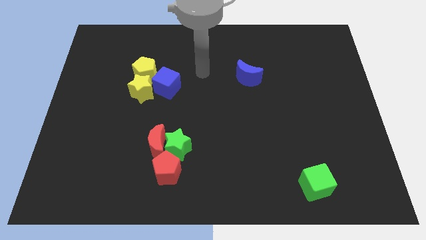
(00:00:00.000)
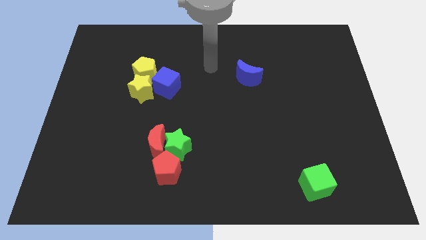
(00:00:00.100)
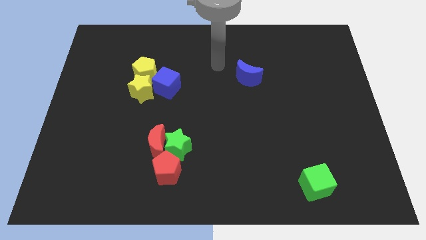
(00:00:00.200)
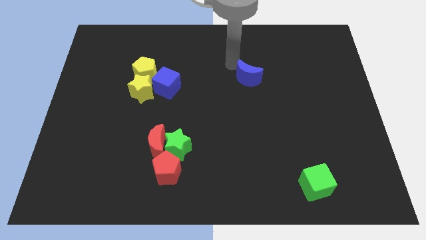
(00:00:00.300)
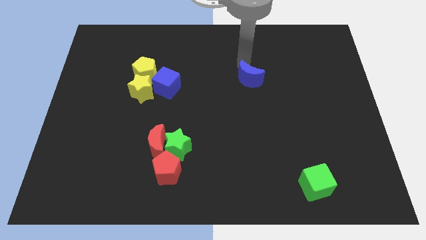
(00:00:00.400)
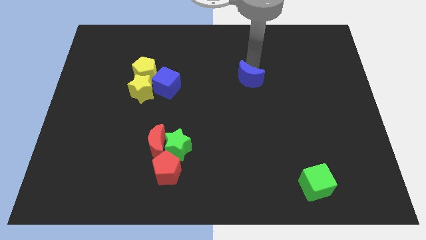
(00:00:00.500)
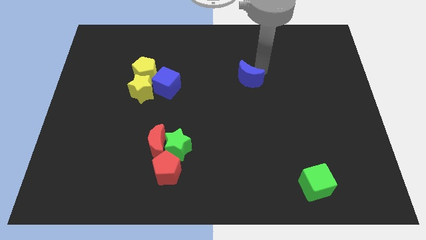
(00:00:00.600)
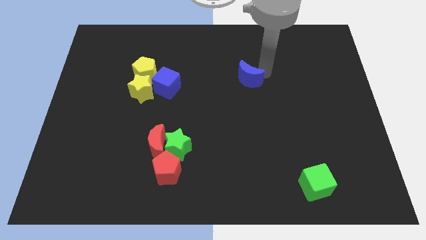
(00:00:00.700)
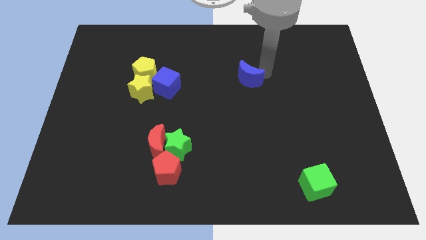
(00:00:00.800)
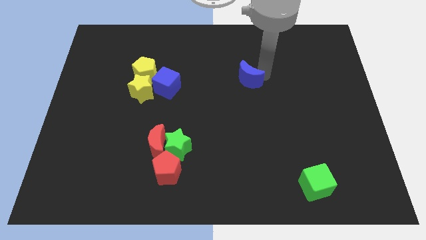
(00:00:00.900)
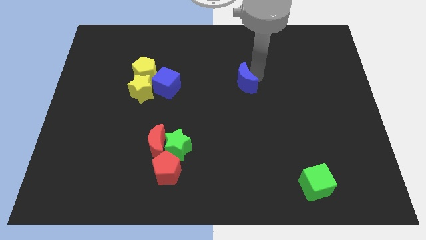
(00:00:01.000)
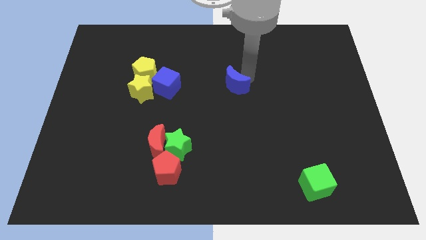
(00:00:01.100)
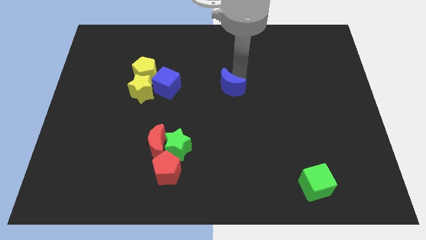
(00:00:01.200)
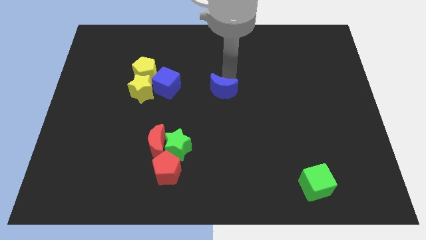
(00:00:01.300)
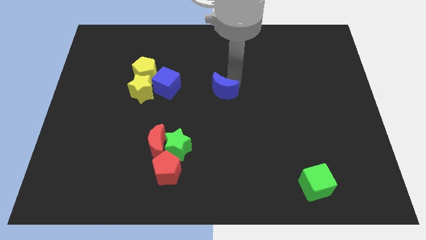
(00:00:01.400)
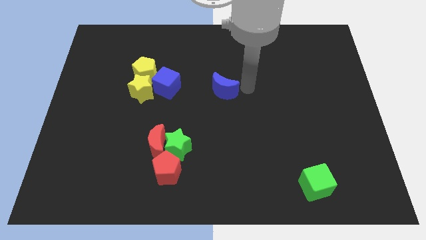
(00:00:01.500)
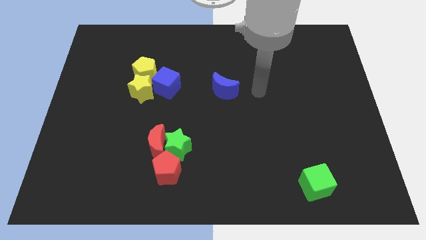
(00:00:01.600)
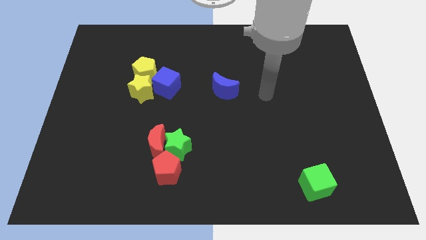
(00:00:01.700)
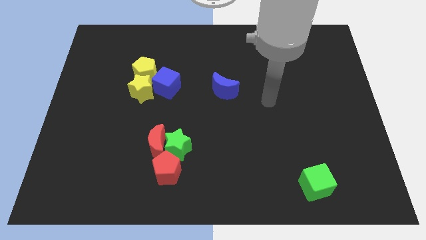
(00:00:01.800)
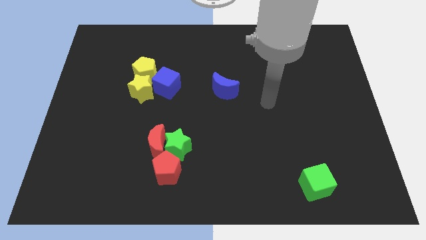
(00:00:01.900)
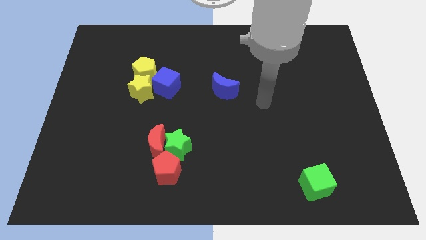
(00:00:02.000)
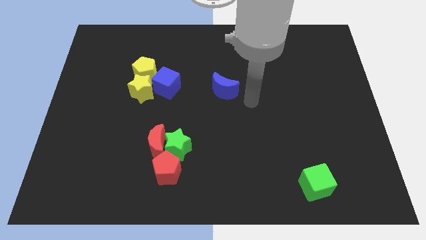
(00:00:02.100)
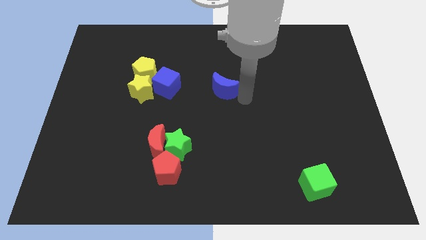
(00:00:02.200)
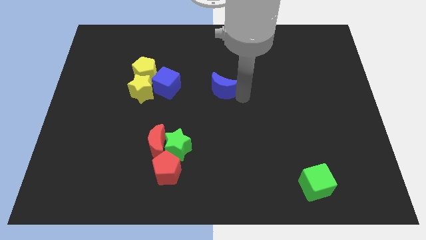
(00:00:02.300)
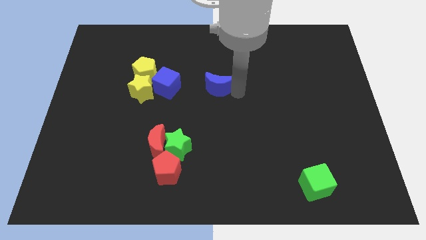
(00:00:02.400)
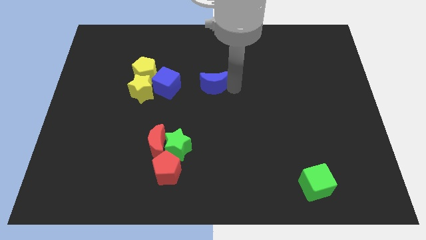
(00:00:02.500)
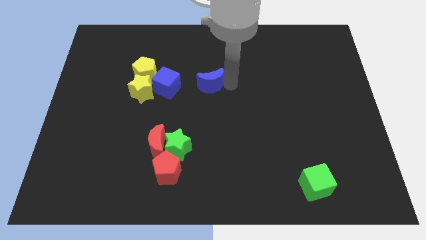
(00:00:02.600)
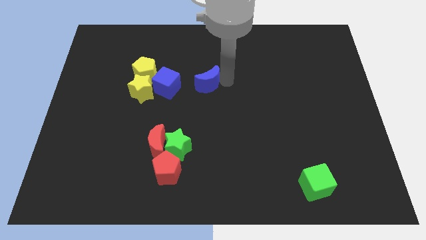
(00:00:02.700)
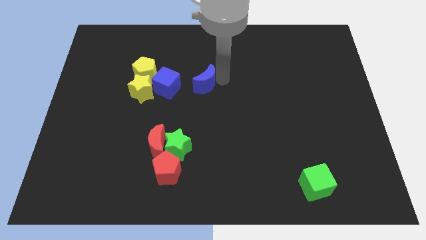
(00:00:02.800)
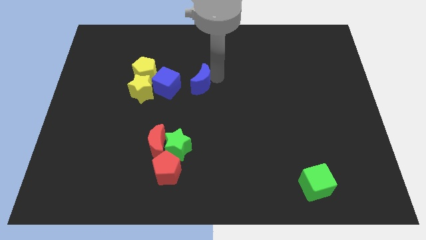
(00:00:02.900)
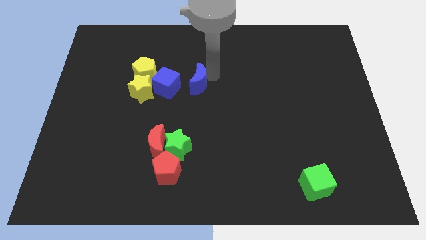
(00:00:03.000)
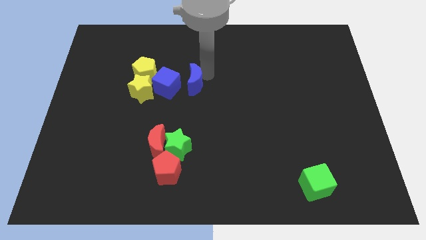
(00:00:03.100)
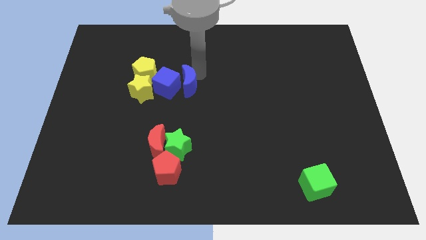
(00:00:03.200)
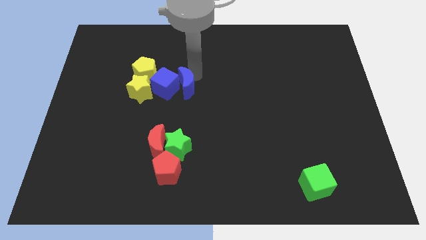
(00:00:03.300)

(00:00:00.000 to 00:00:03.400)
move the blue moon close to the blue cube

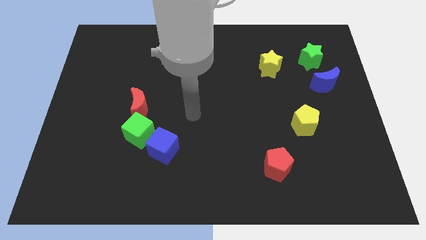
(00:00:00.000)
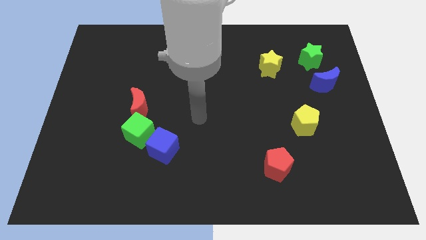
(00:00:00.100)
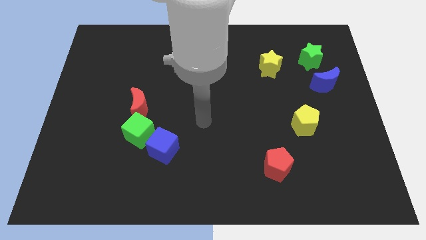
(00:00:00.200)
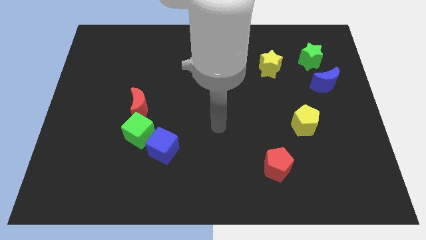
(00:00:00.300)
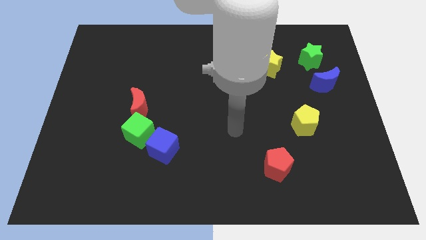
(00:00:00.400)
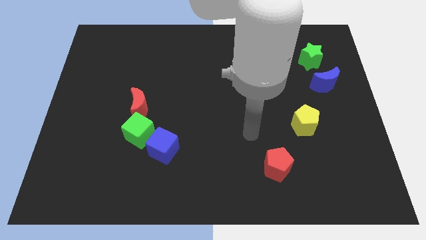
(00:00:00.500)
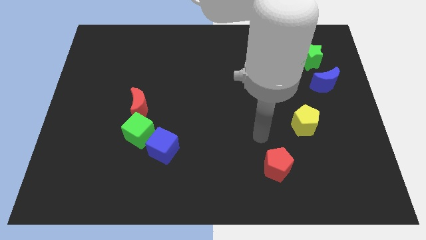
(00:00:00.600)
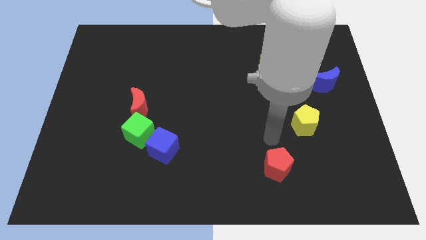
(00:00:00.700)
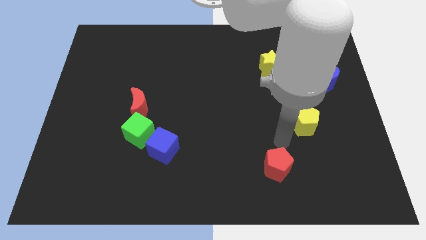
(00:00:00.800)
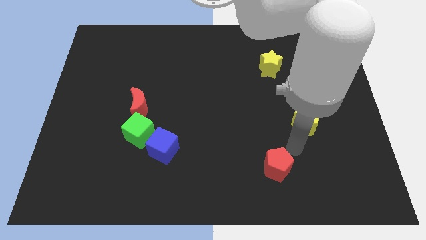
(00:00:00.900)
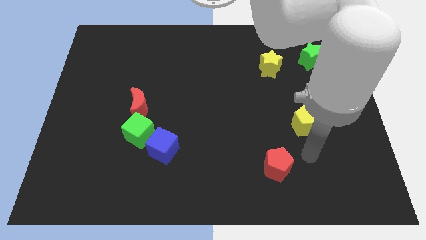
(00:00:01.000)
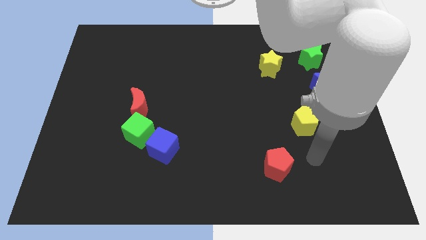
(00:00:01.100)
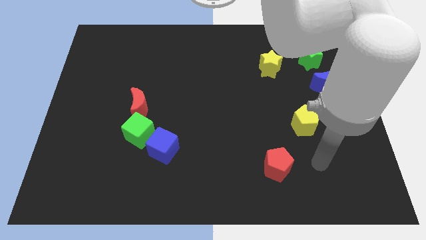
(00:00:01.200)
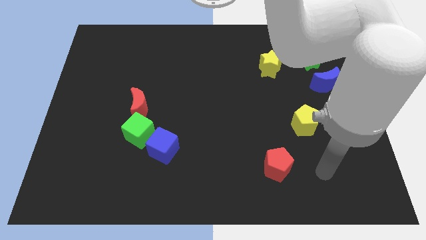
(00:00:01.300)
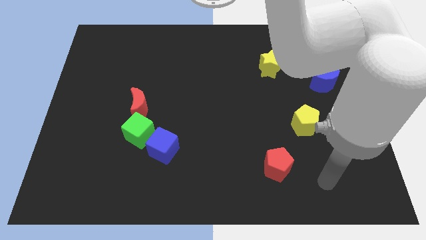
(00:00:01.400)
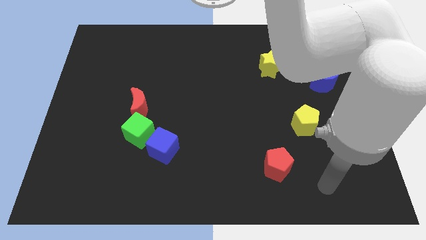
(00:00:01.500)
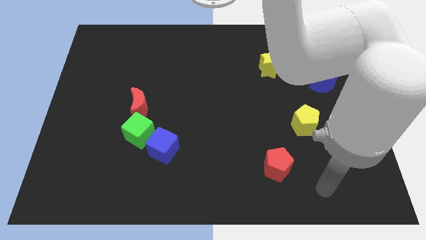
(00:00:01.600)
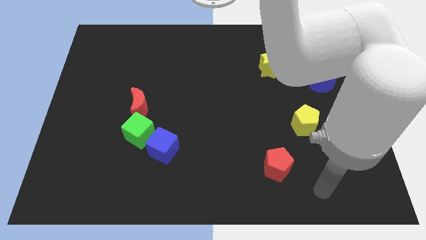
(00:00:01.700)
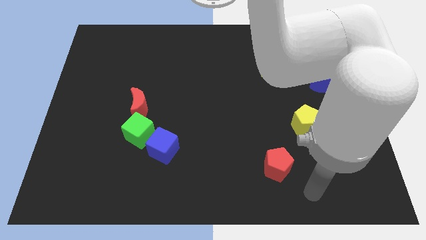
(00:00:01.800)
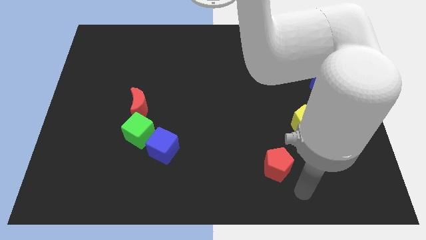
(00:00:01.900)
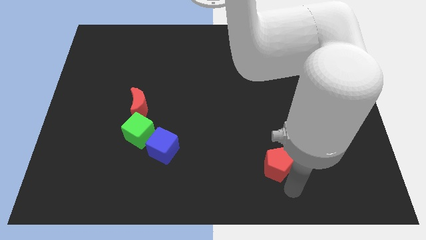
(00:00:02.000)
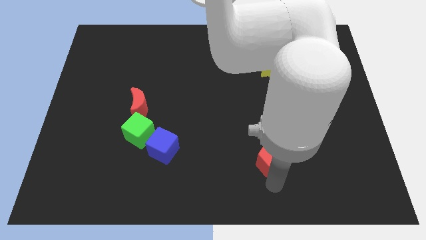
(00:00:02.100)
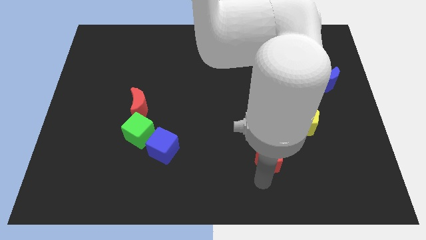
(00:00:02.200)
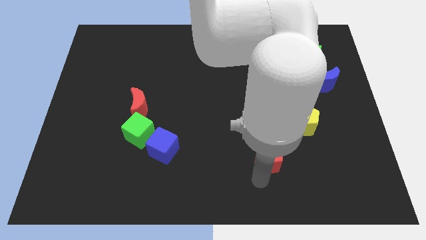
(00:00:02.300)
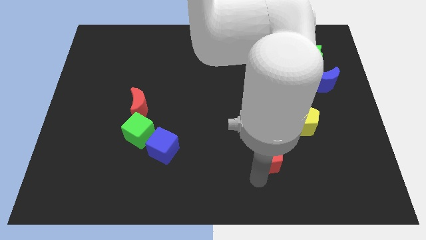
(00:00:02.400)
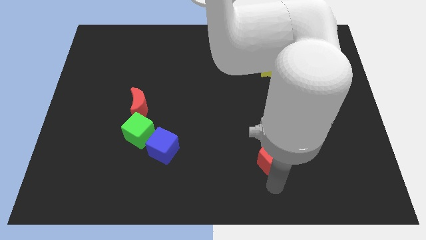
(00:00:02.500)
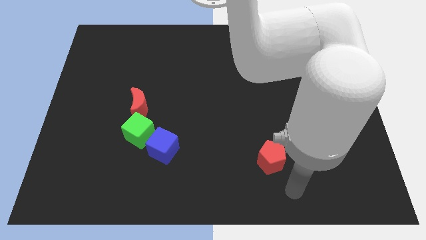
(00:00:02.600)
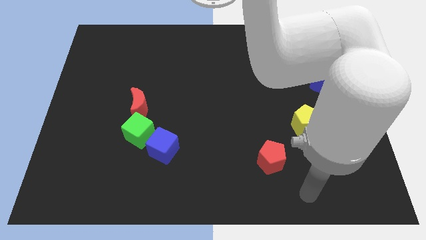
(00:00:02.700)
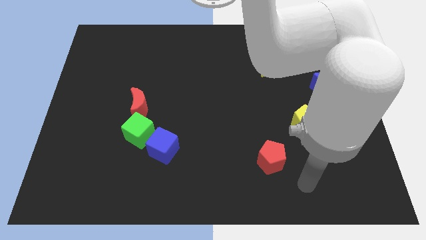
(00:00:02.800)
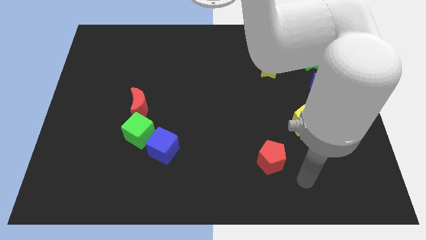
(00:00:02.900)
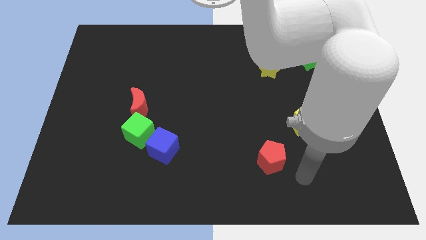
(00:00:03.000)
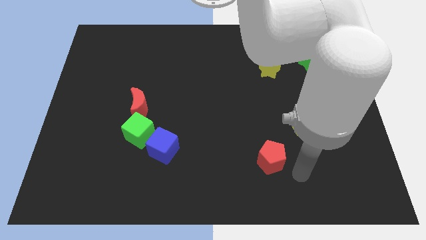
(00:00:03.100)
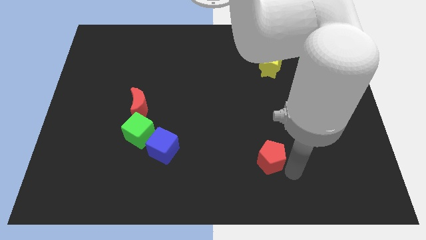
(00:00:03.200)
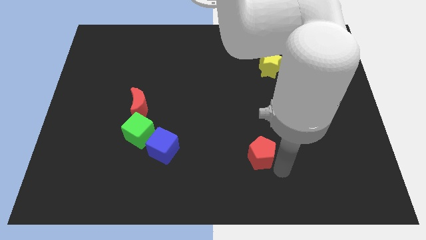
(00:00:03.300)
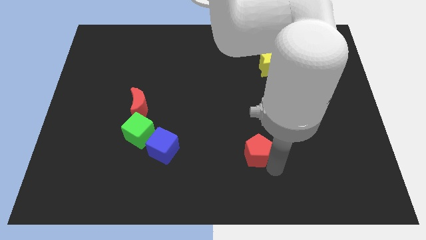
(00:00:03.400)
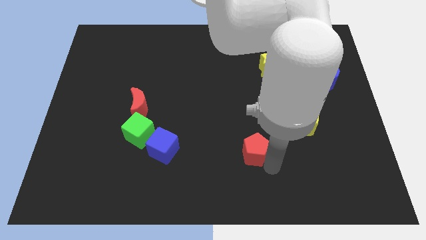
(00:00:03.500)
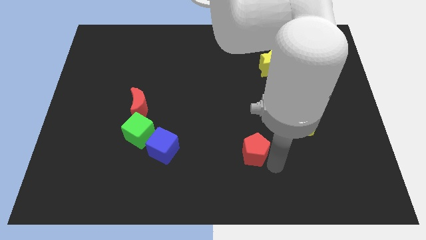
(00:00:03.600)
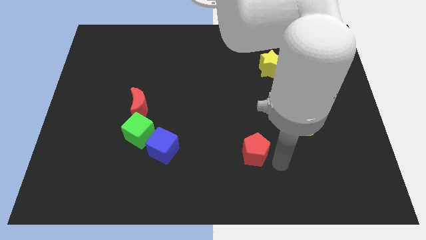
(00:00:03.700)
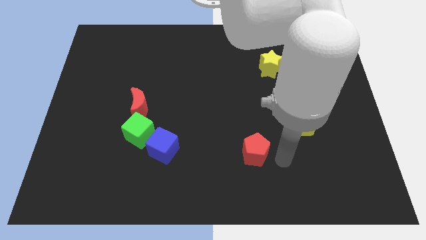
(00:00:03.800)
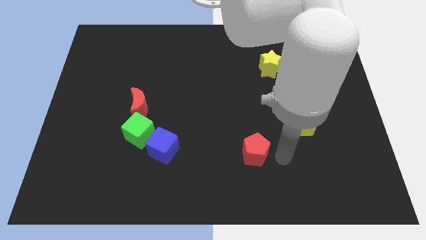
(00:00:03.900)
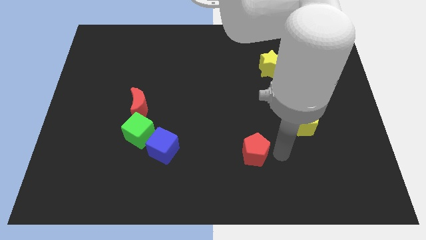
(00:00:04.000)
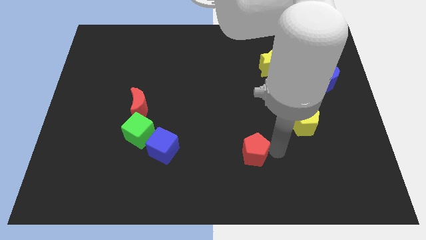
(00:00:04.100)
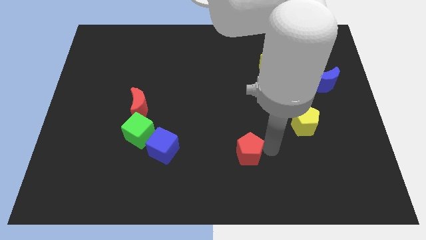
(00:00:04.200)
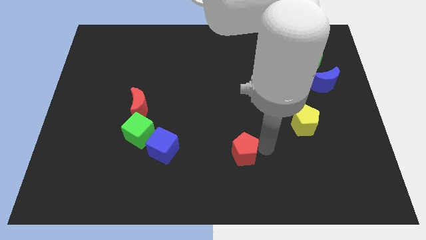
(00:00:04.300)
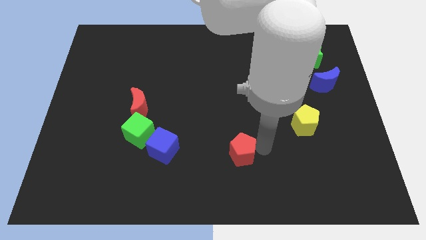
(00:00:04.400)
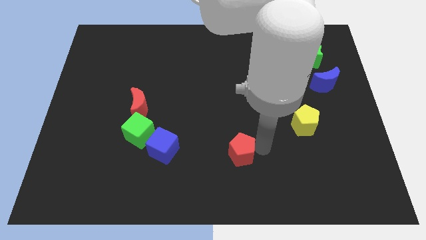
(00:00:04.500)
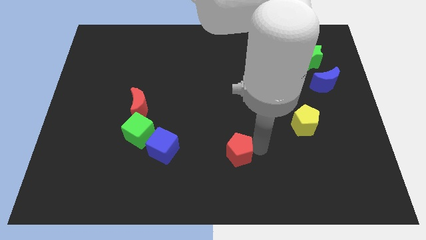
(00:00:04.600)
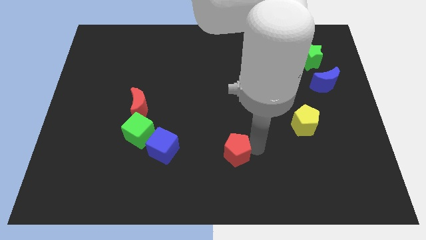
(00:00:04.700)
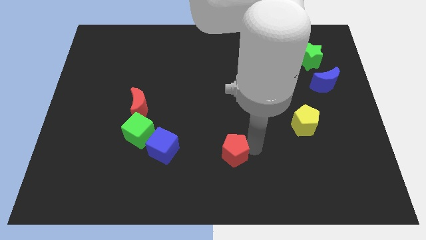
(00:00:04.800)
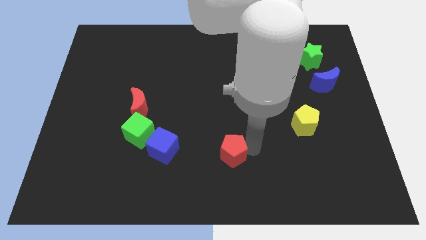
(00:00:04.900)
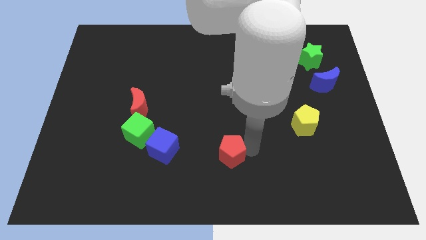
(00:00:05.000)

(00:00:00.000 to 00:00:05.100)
slide red pentagon to the right of blue cube

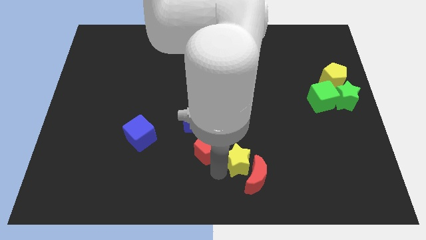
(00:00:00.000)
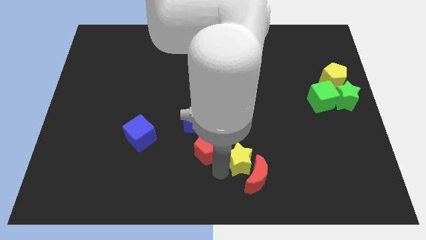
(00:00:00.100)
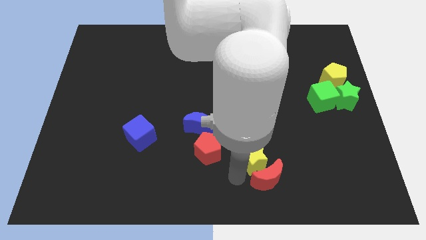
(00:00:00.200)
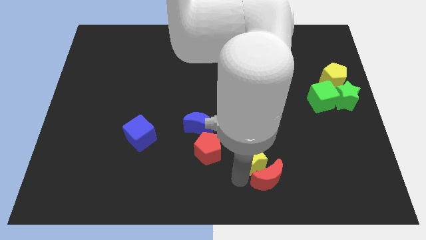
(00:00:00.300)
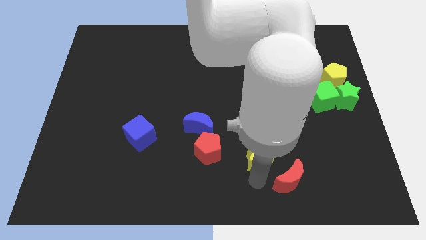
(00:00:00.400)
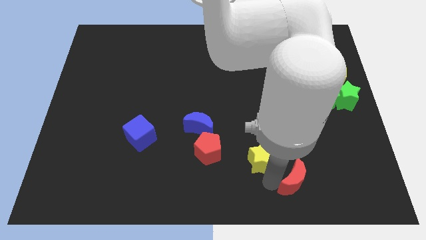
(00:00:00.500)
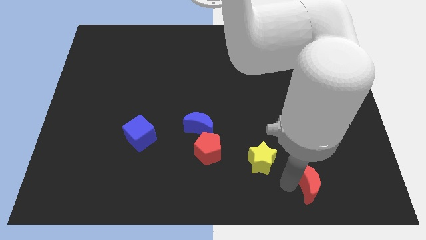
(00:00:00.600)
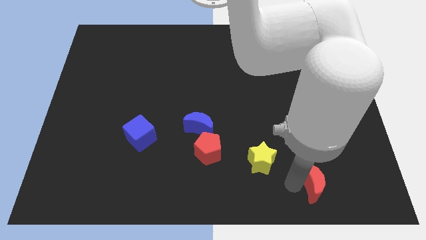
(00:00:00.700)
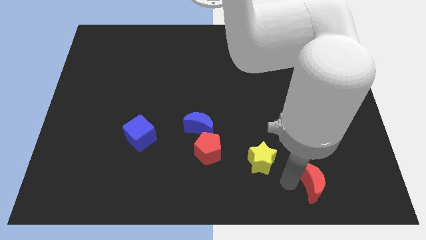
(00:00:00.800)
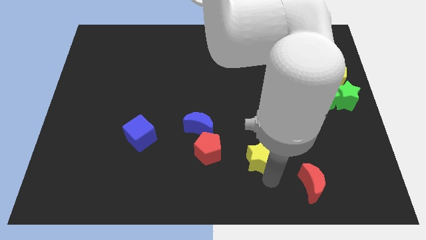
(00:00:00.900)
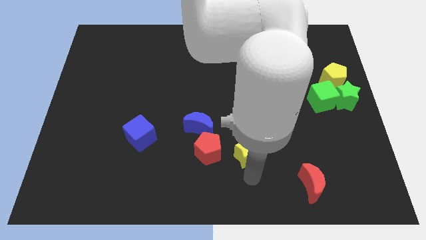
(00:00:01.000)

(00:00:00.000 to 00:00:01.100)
separate the yellow star from the red moon
